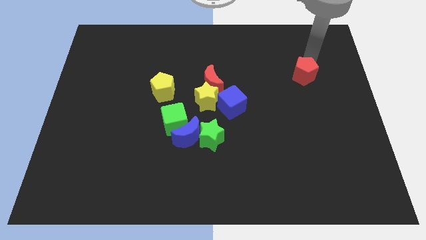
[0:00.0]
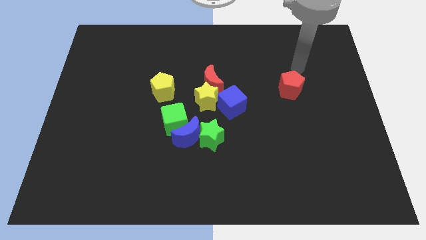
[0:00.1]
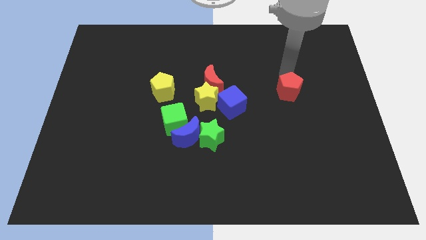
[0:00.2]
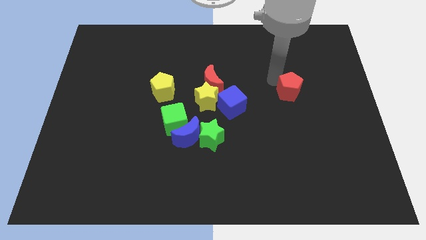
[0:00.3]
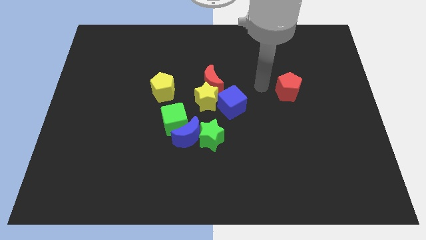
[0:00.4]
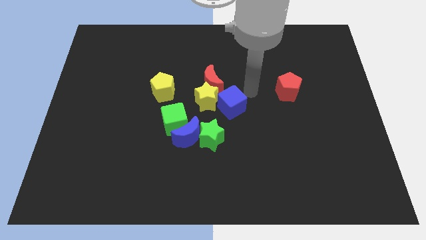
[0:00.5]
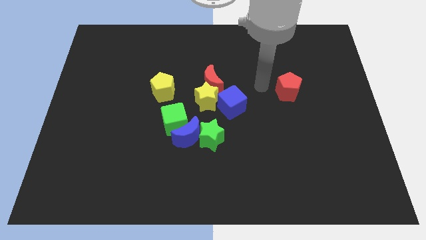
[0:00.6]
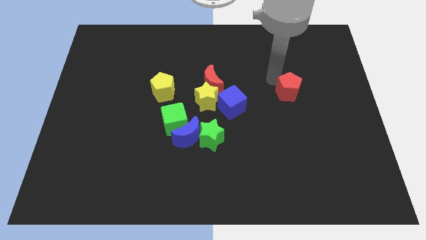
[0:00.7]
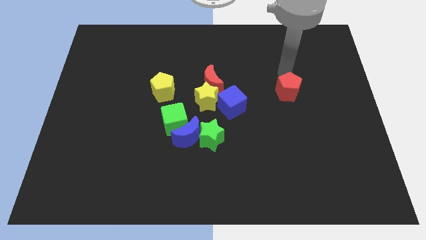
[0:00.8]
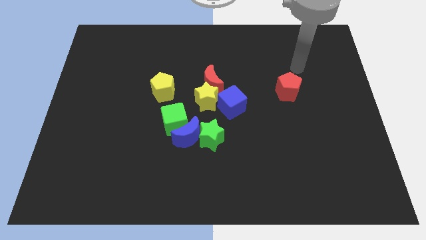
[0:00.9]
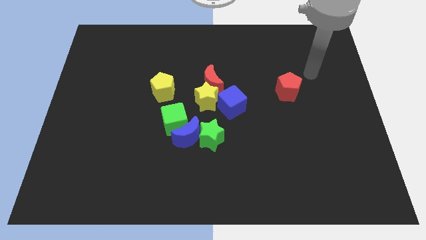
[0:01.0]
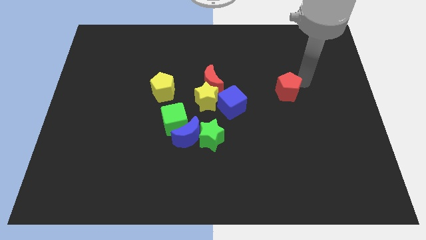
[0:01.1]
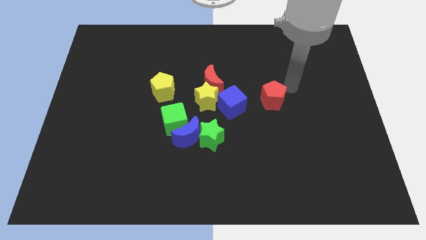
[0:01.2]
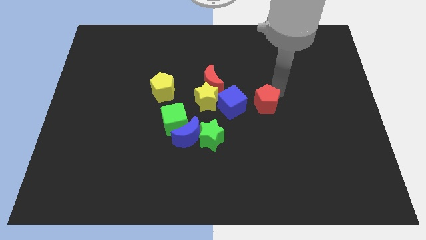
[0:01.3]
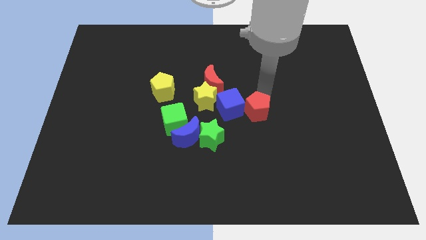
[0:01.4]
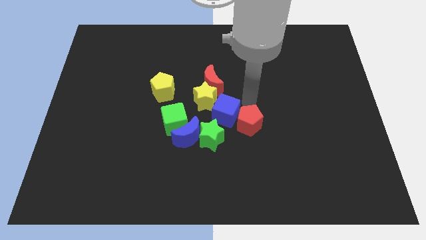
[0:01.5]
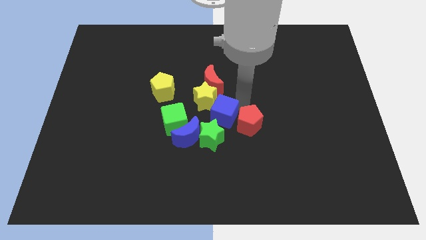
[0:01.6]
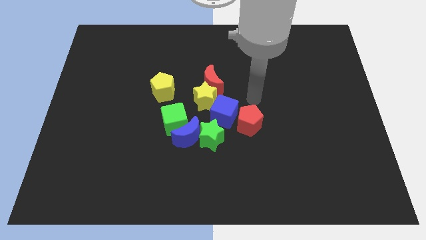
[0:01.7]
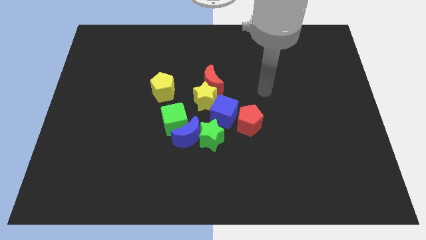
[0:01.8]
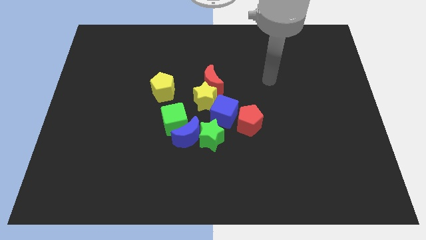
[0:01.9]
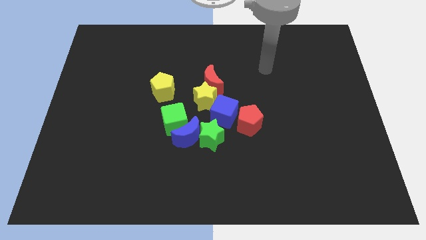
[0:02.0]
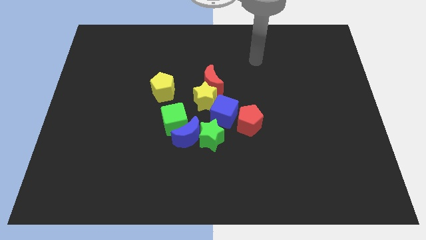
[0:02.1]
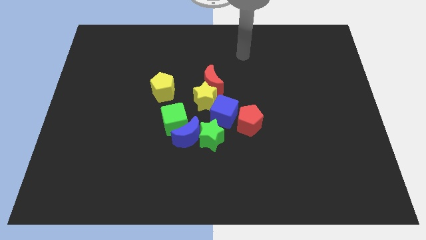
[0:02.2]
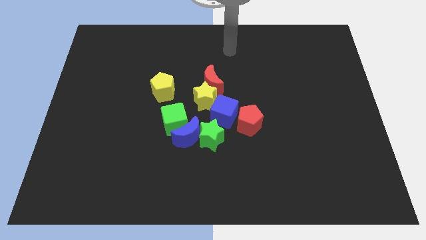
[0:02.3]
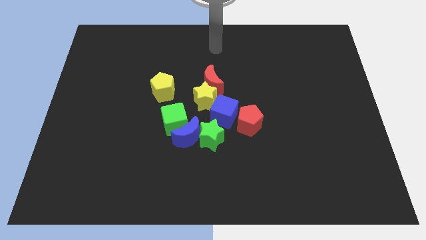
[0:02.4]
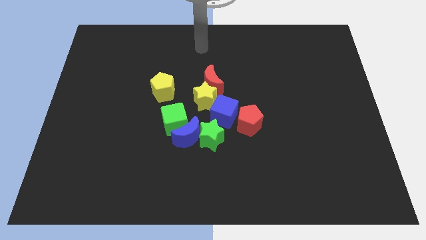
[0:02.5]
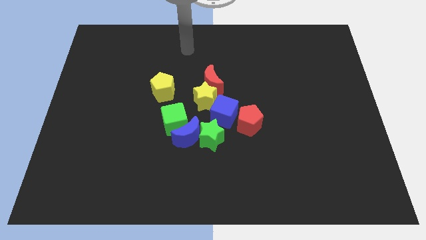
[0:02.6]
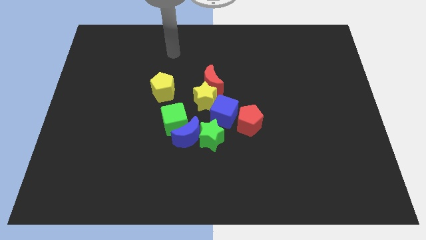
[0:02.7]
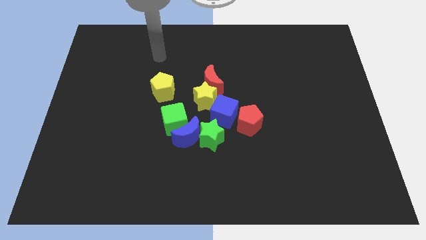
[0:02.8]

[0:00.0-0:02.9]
move the red pentagon into the blue cube

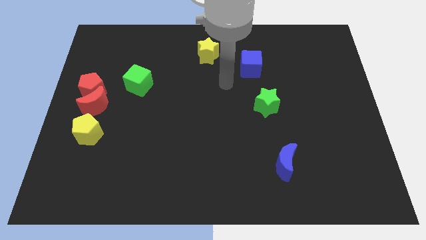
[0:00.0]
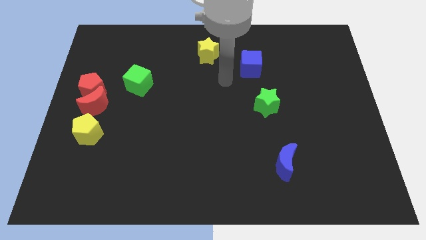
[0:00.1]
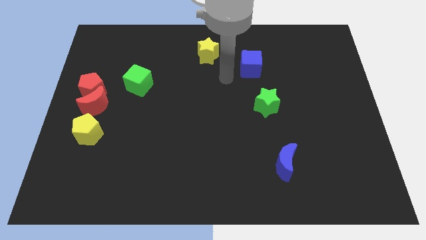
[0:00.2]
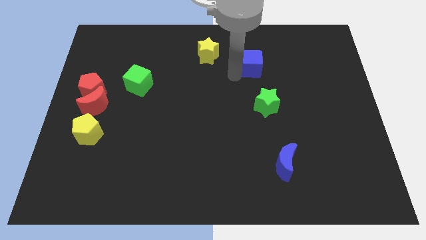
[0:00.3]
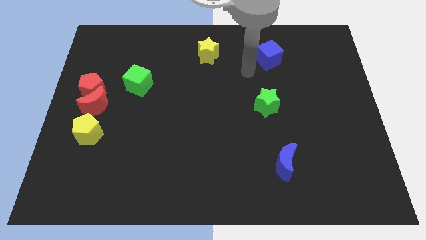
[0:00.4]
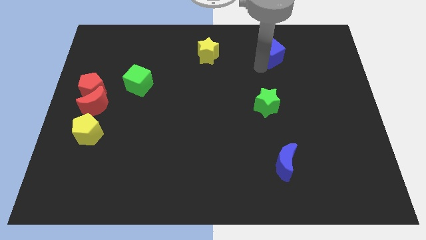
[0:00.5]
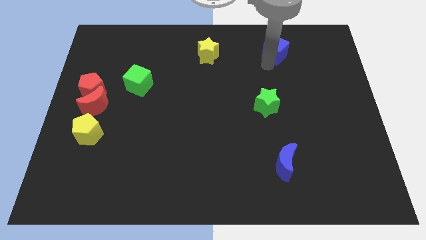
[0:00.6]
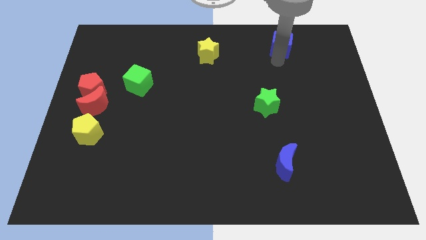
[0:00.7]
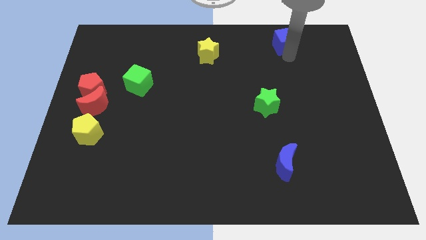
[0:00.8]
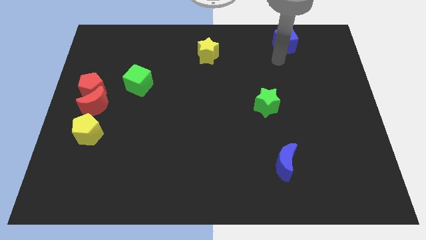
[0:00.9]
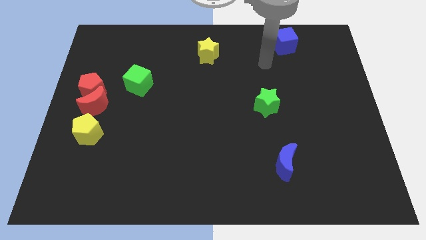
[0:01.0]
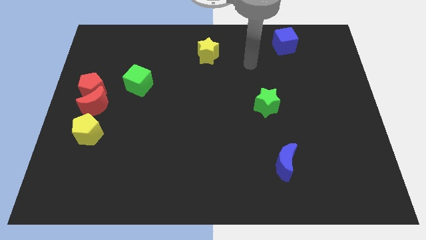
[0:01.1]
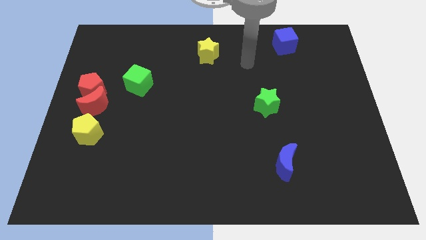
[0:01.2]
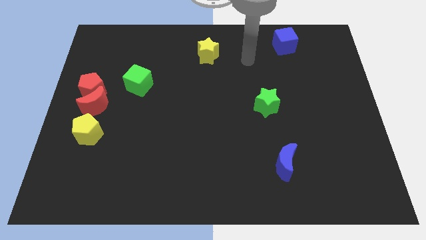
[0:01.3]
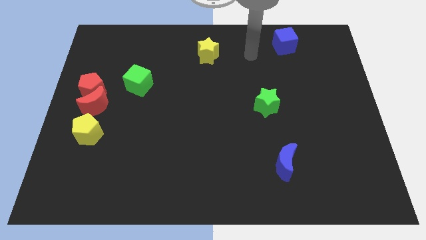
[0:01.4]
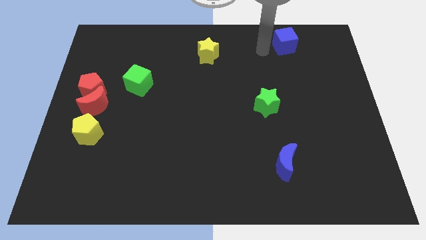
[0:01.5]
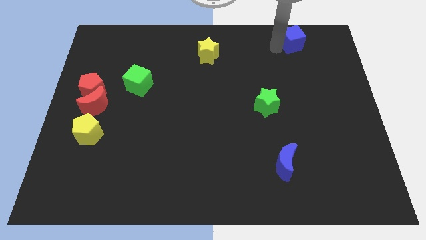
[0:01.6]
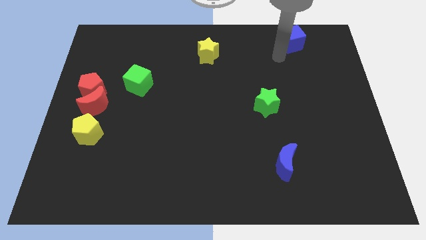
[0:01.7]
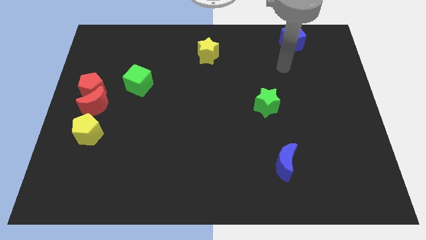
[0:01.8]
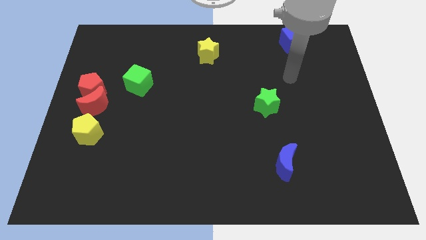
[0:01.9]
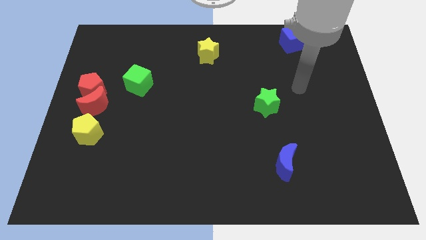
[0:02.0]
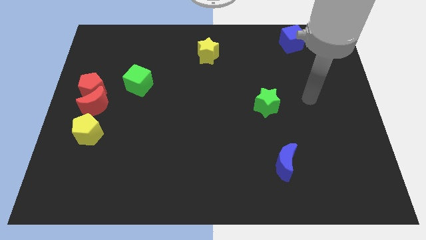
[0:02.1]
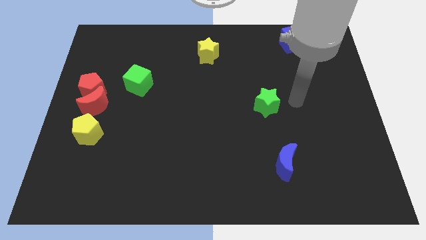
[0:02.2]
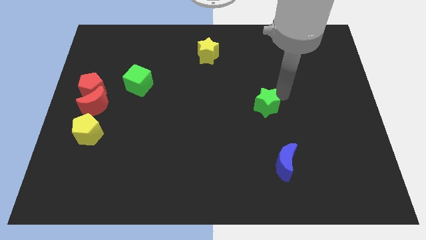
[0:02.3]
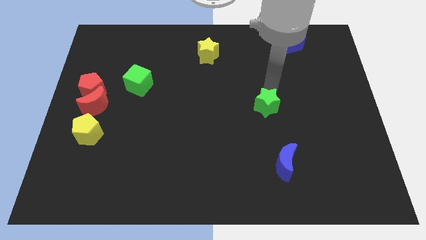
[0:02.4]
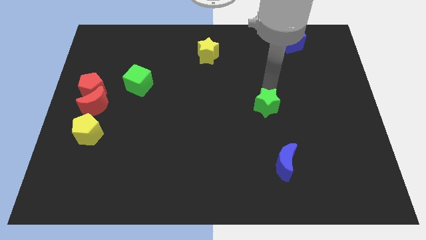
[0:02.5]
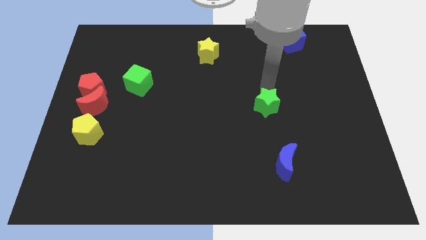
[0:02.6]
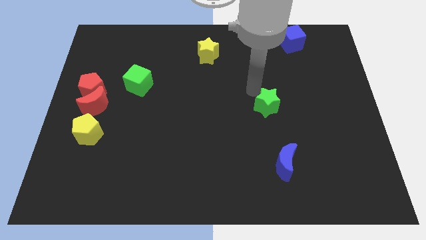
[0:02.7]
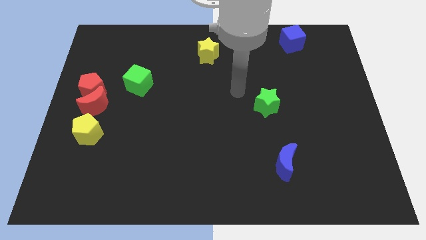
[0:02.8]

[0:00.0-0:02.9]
move the blue cube towards the right top corner of the board

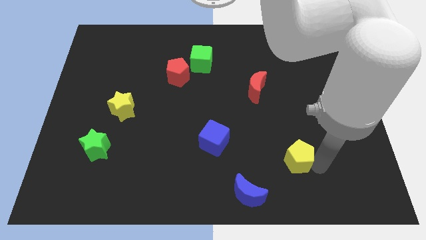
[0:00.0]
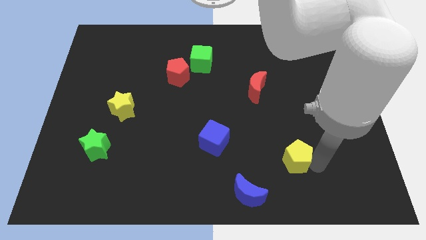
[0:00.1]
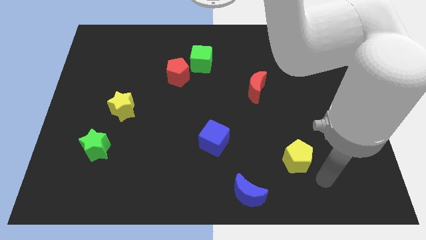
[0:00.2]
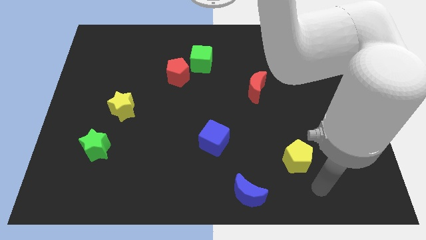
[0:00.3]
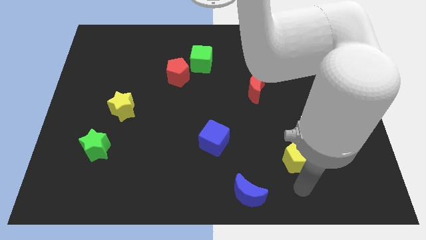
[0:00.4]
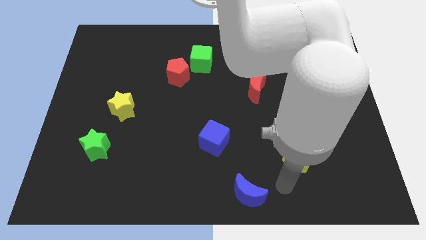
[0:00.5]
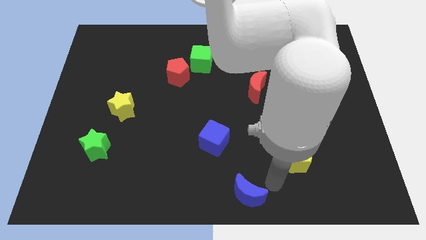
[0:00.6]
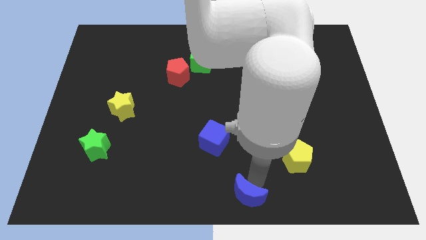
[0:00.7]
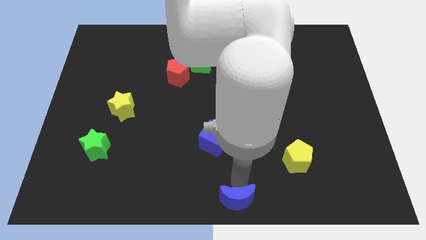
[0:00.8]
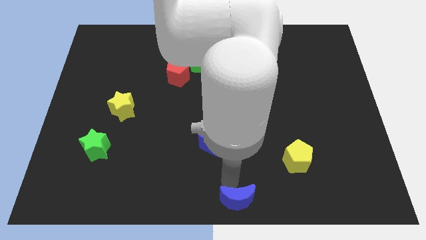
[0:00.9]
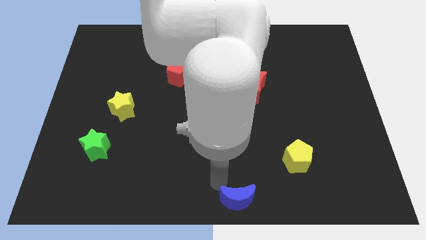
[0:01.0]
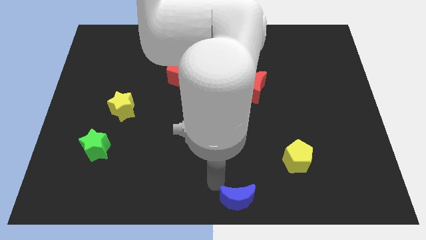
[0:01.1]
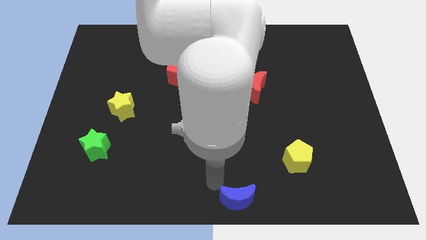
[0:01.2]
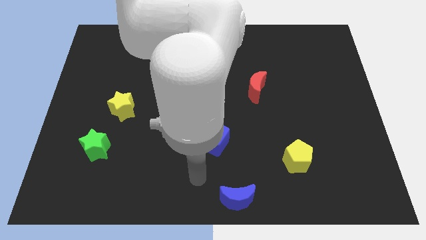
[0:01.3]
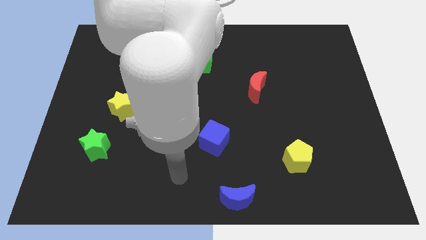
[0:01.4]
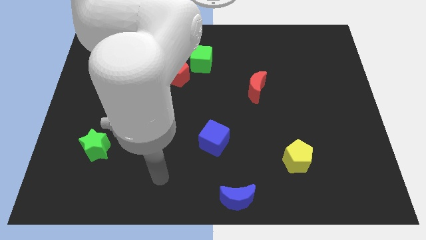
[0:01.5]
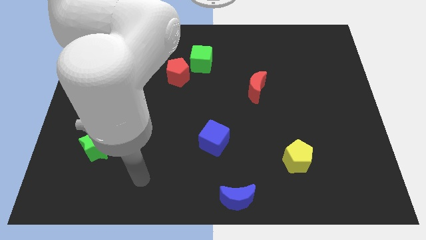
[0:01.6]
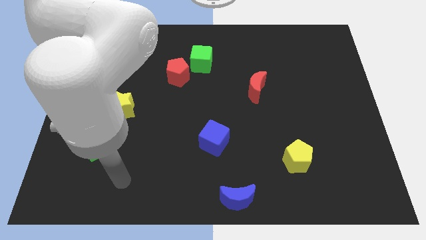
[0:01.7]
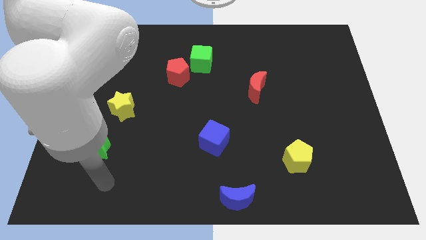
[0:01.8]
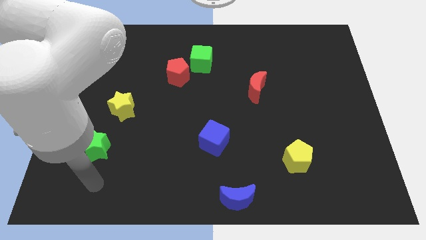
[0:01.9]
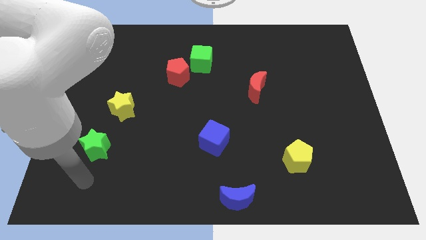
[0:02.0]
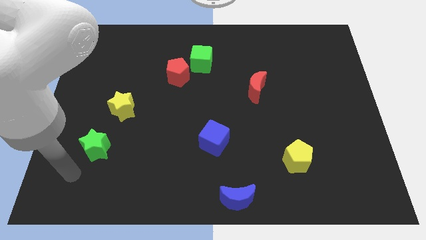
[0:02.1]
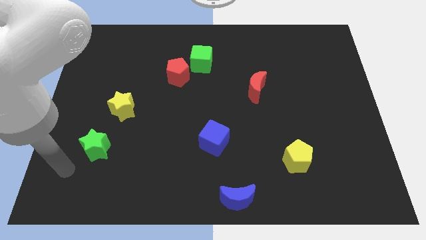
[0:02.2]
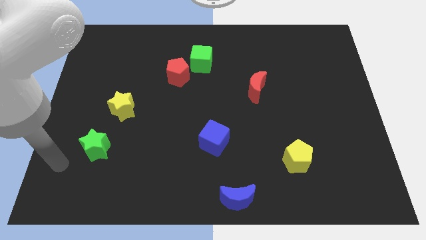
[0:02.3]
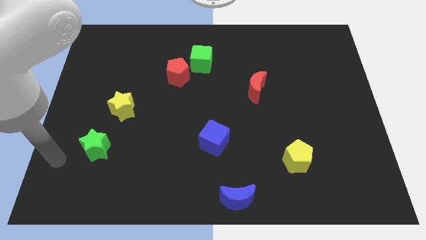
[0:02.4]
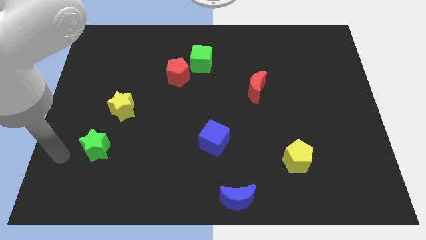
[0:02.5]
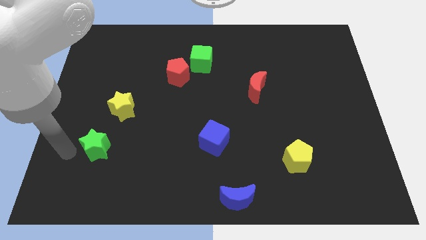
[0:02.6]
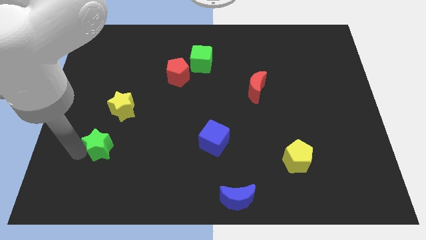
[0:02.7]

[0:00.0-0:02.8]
push blue moon to the bottom center of the board

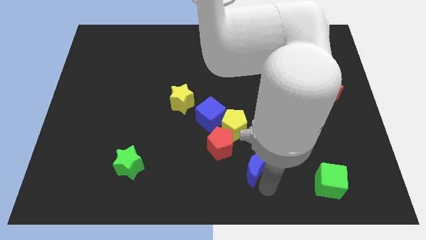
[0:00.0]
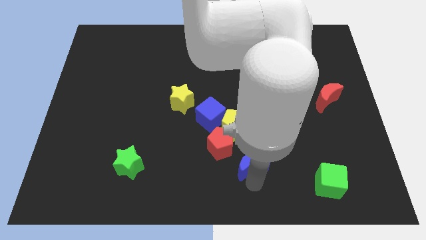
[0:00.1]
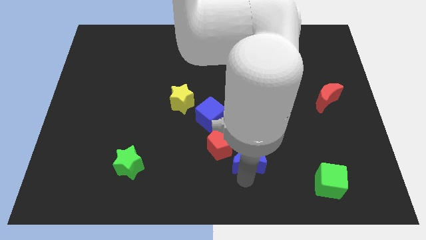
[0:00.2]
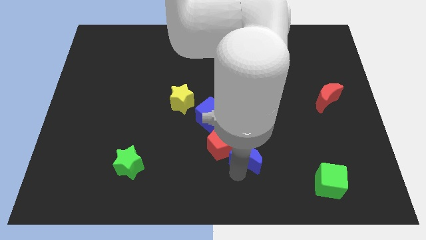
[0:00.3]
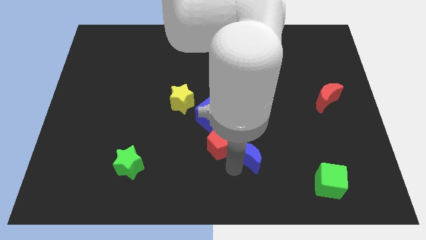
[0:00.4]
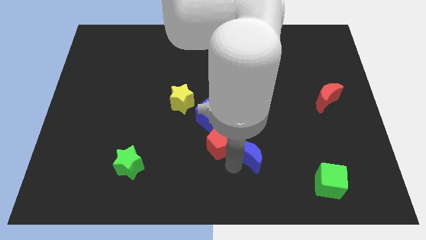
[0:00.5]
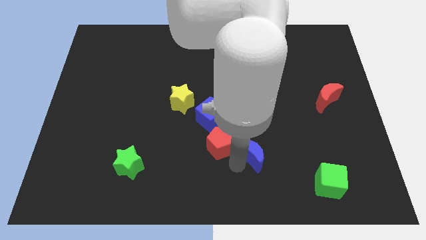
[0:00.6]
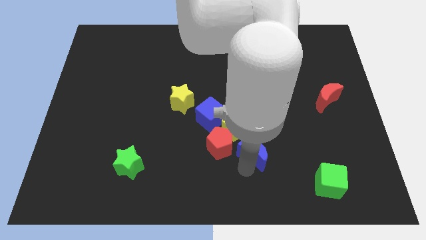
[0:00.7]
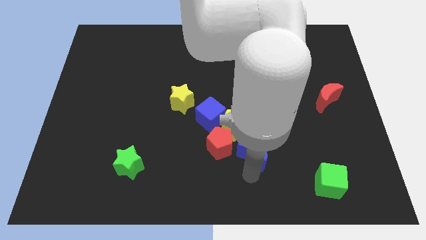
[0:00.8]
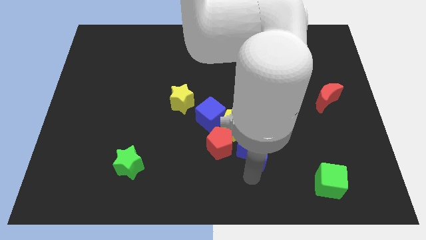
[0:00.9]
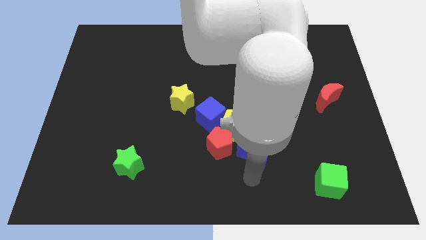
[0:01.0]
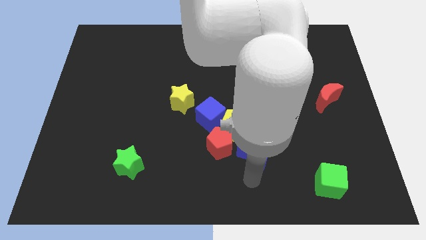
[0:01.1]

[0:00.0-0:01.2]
place the blue crescent to the right of red pentagon
